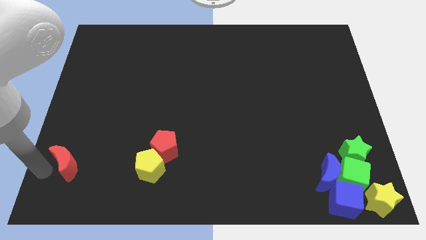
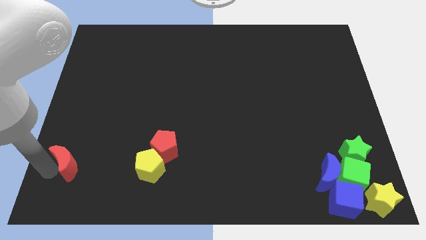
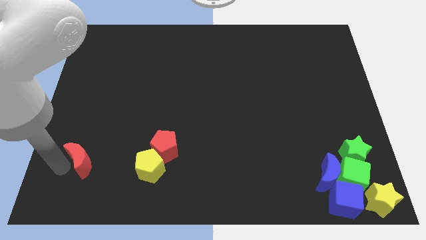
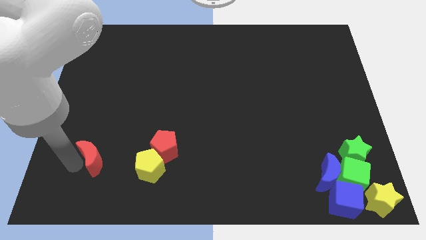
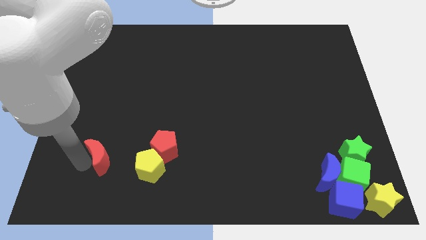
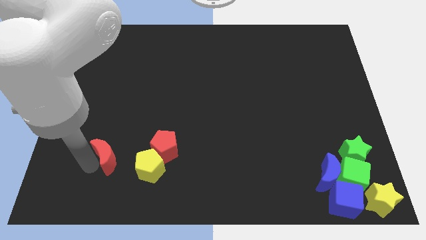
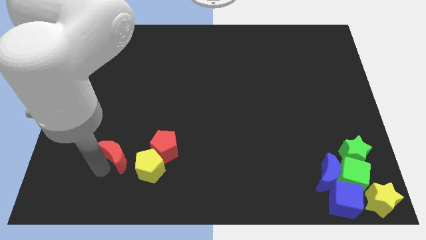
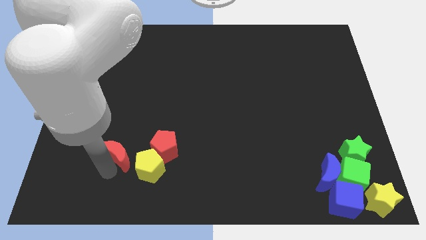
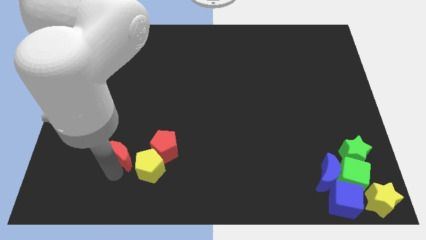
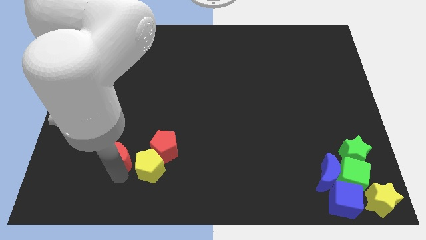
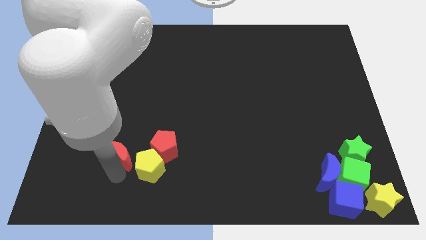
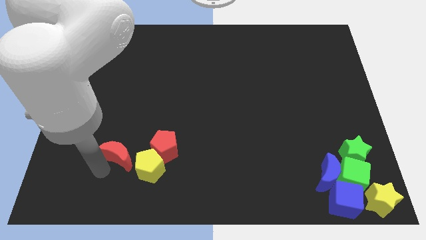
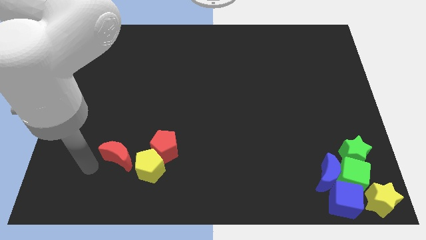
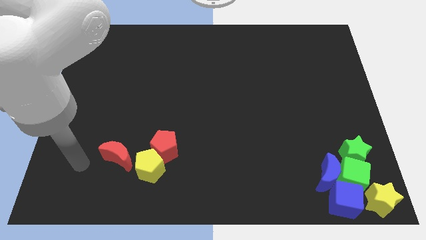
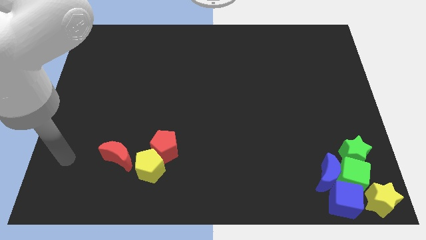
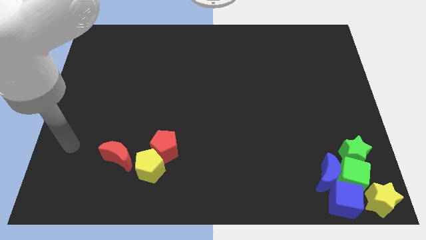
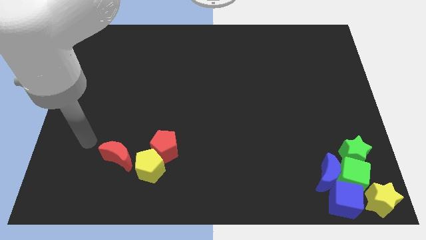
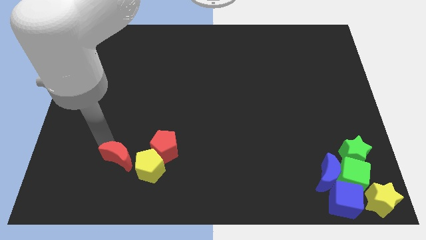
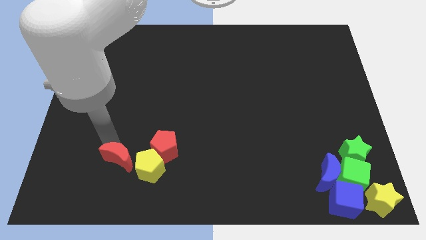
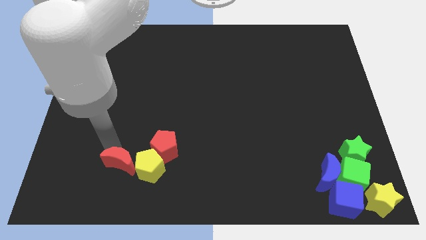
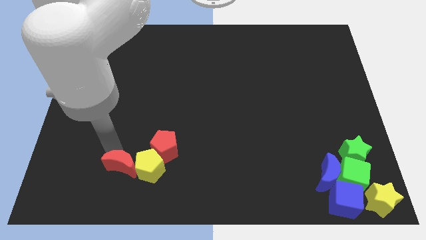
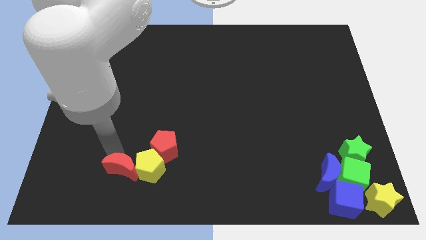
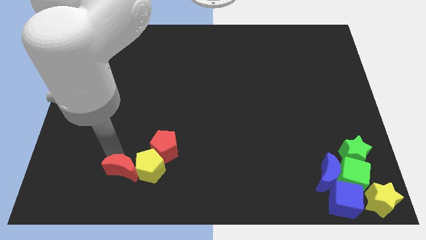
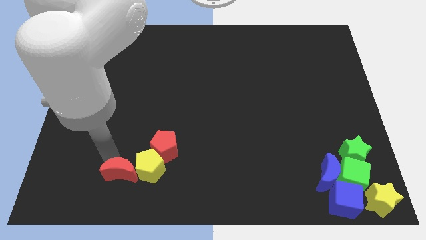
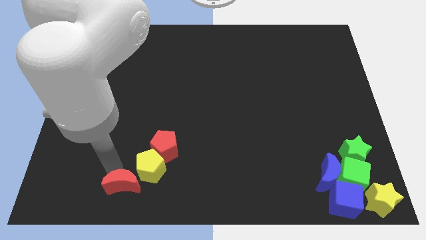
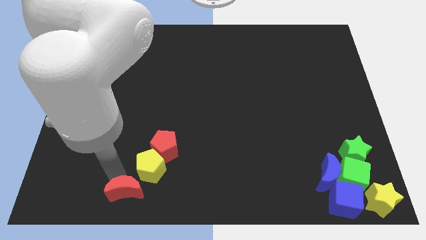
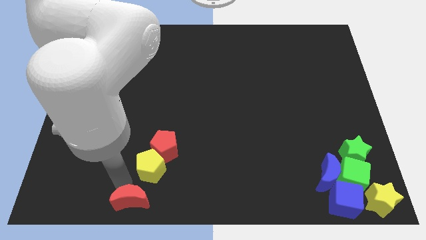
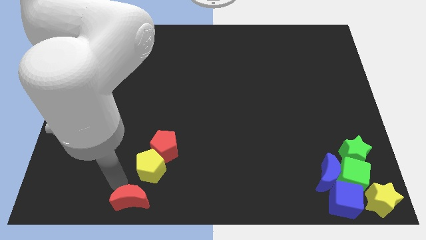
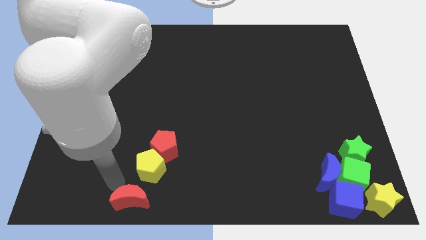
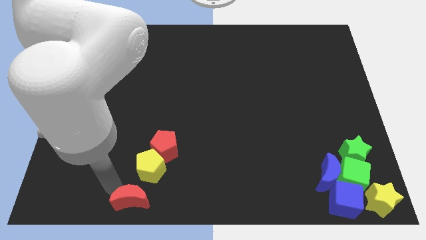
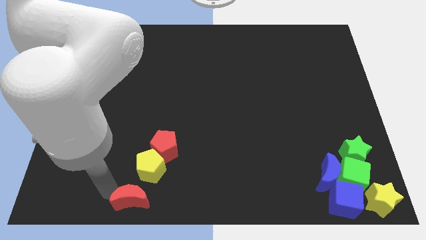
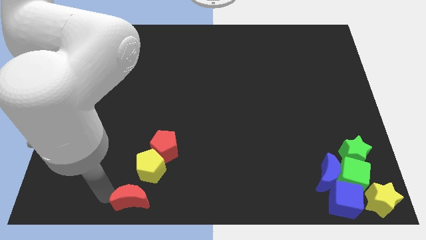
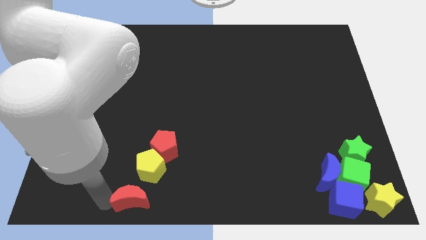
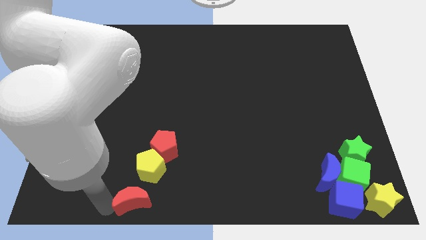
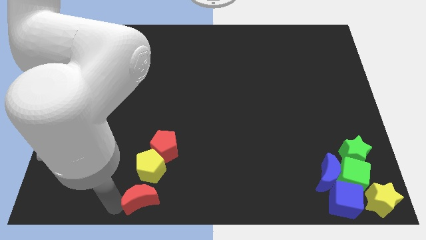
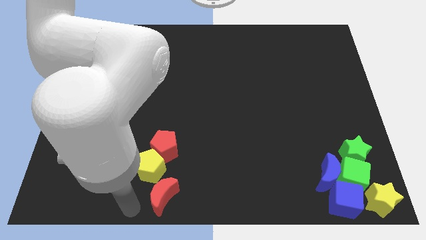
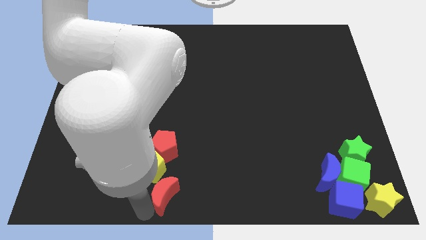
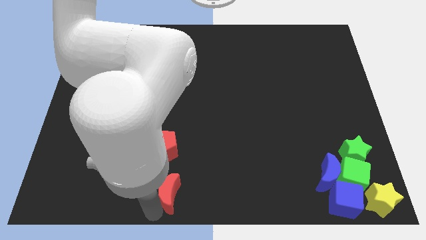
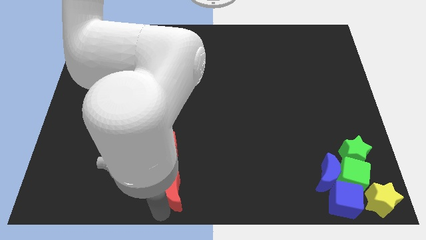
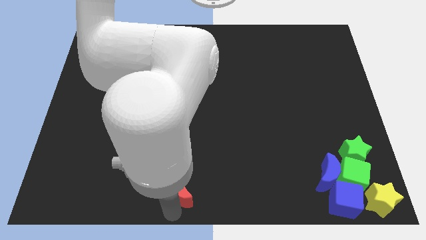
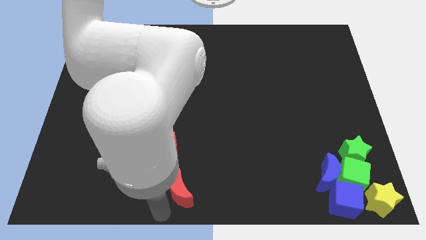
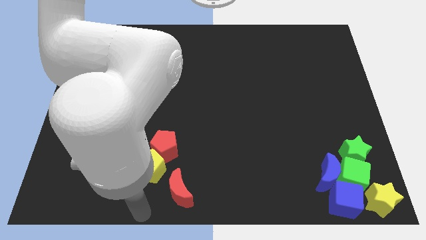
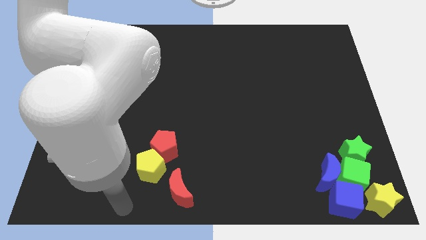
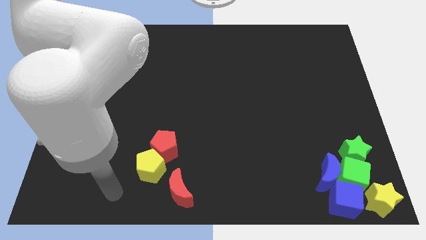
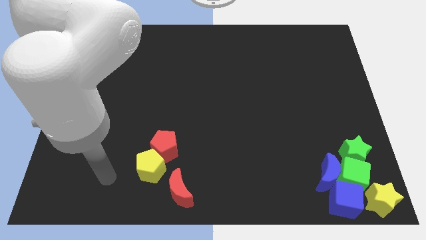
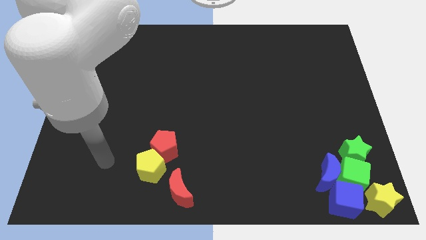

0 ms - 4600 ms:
place red moon to the bottom of red pentagon

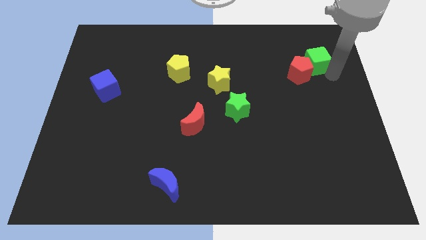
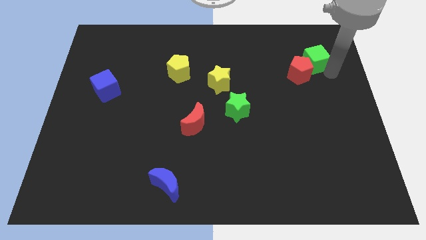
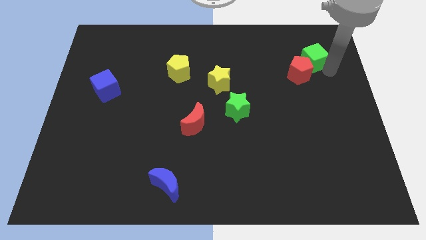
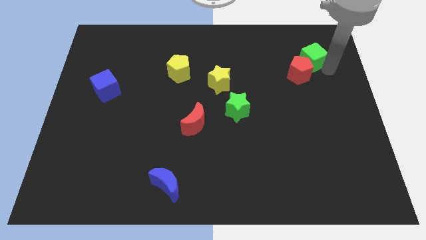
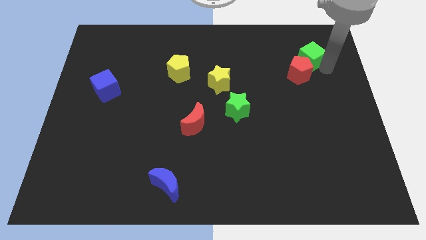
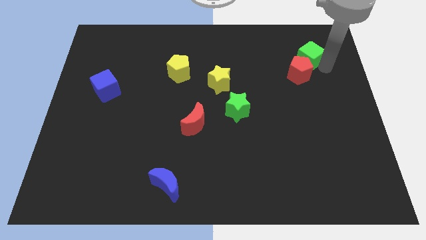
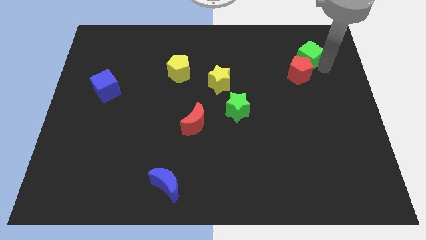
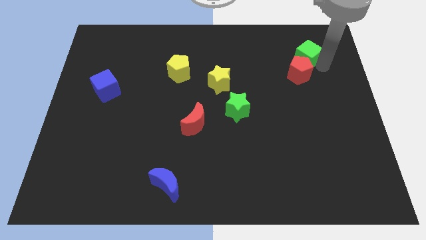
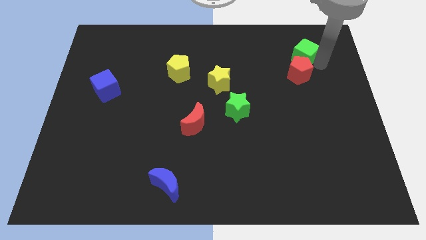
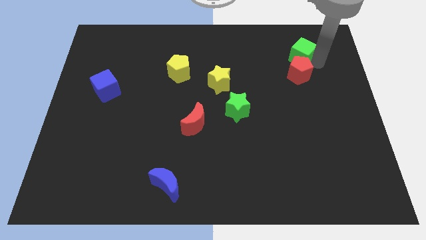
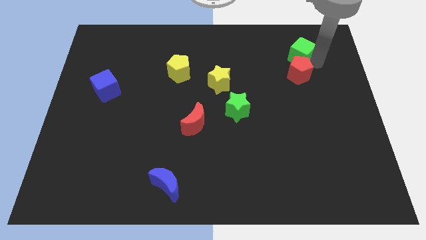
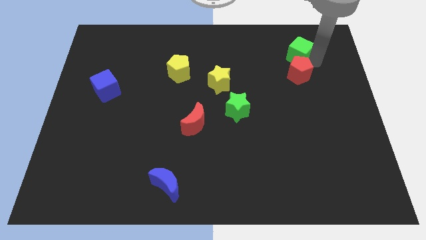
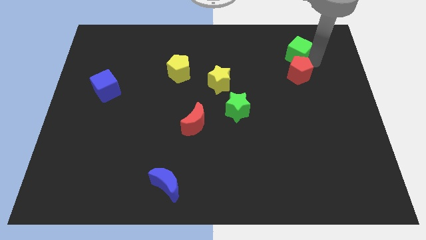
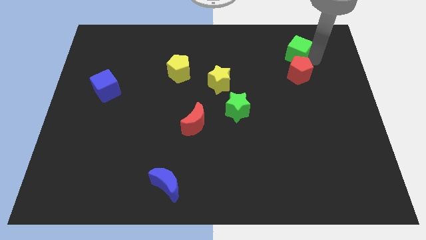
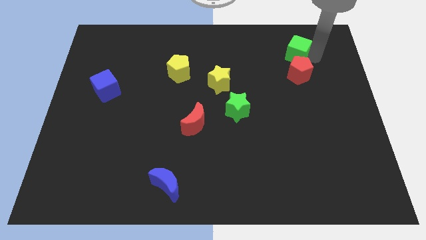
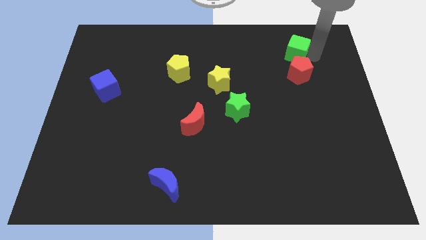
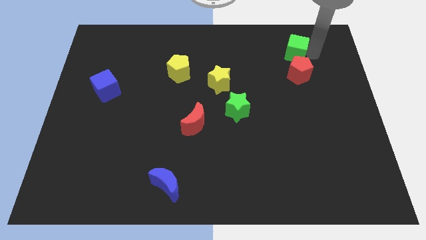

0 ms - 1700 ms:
separate the green cube from the red pentagon

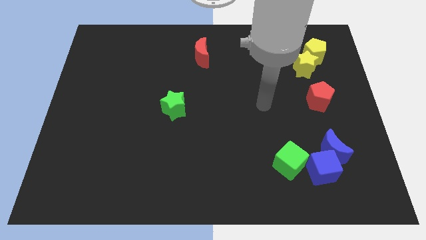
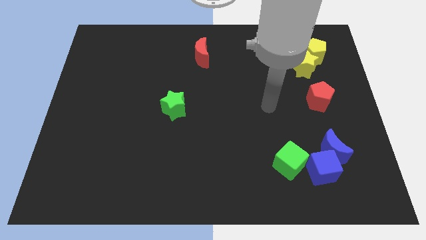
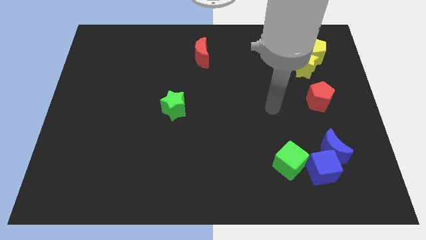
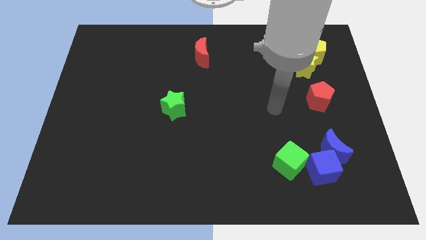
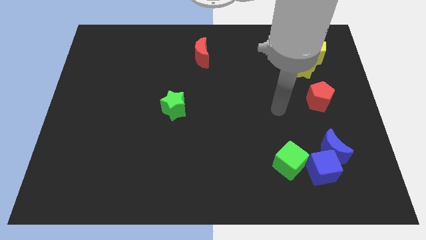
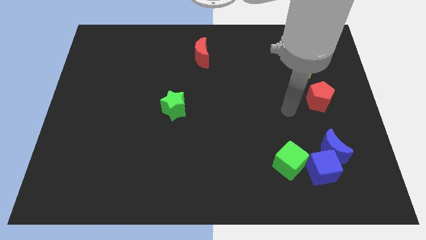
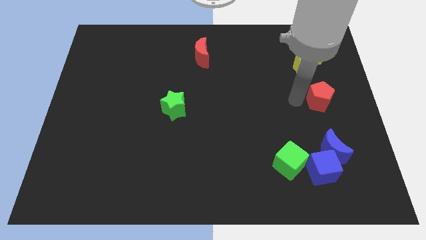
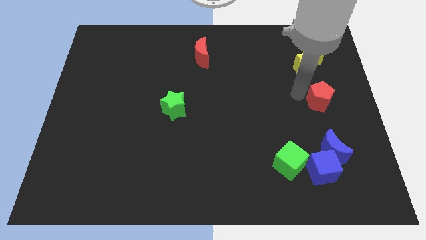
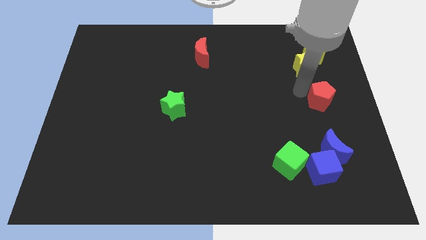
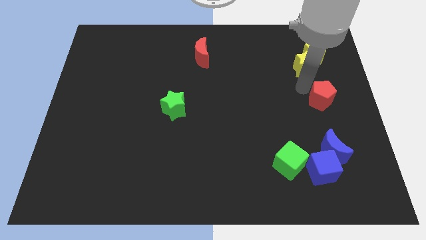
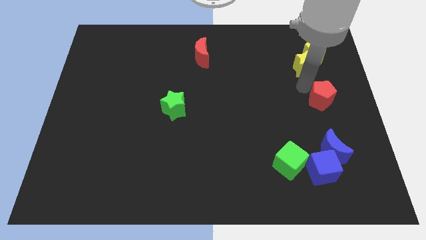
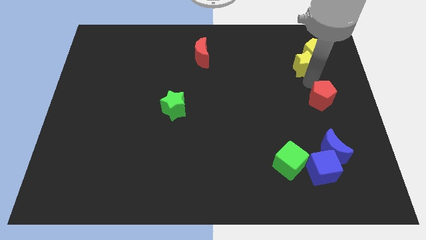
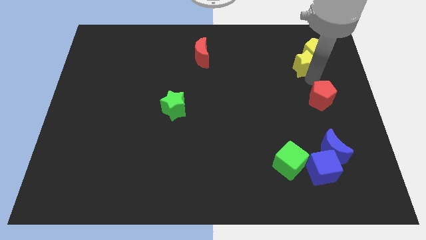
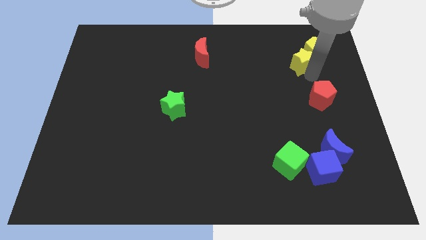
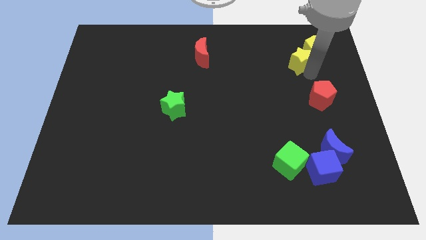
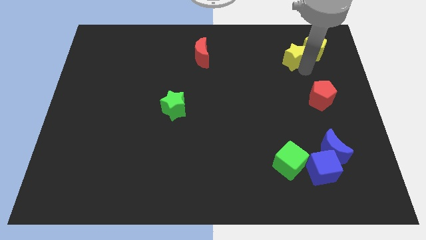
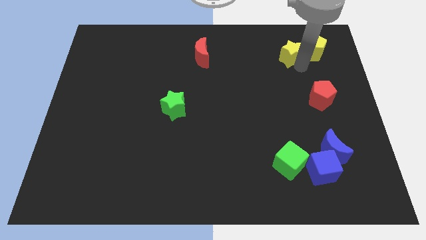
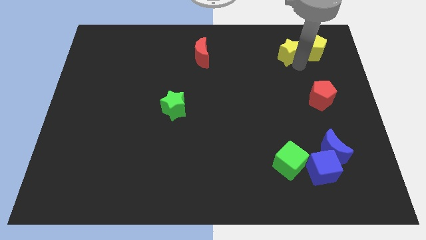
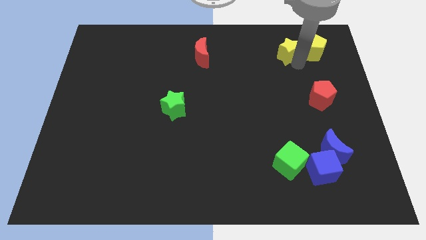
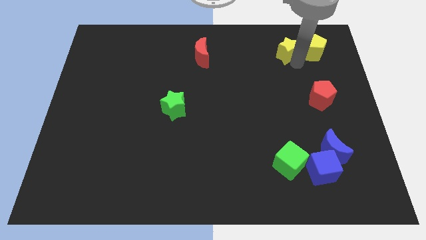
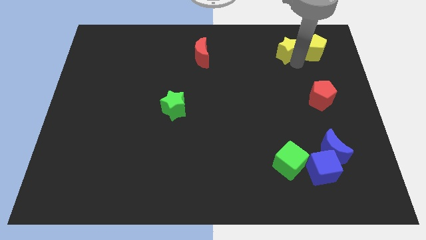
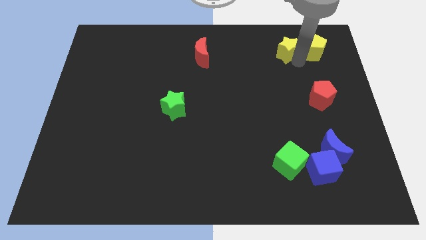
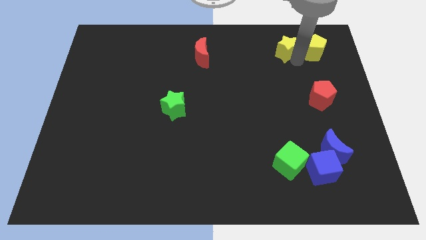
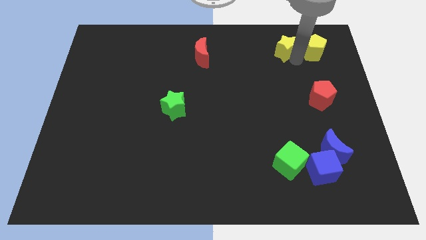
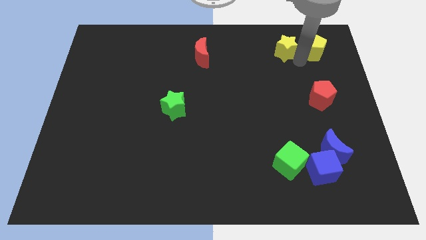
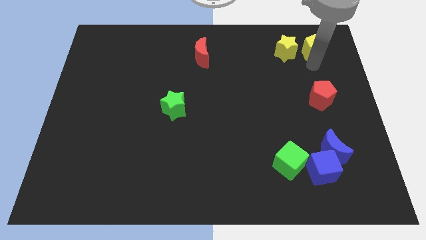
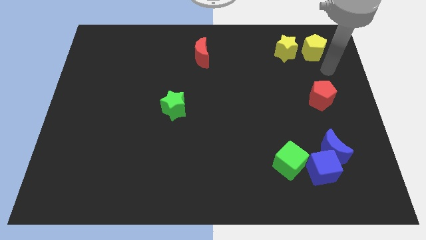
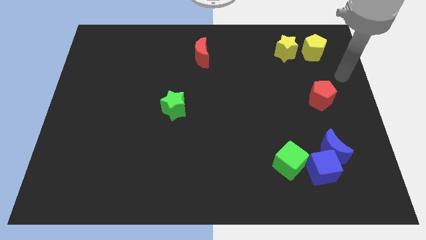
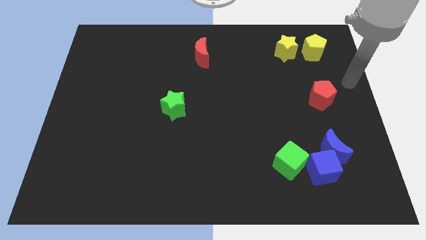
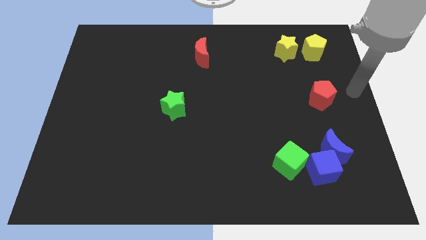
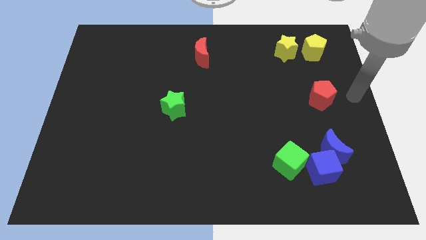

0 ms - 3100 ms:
place yellow star to the left of yellow pentagon
